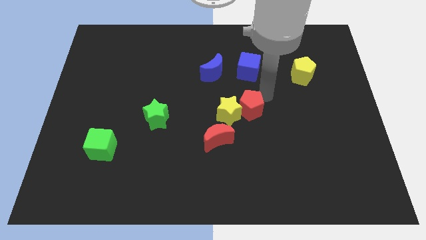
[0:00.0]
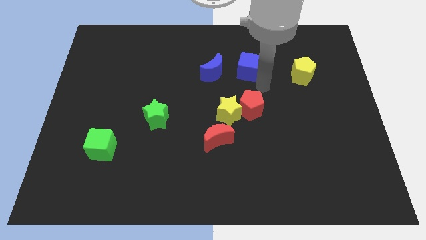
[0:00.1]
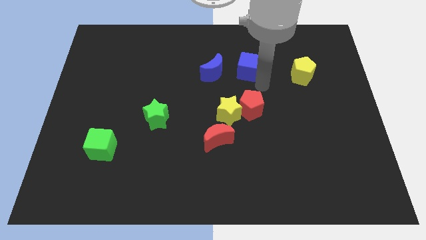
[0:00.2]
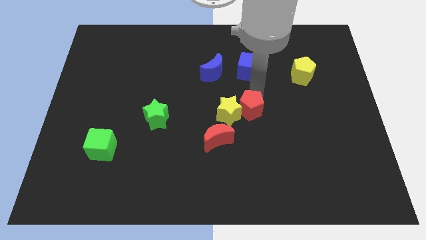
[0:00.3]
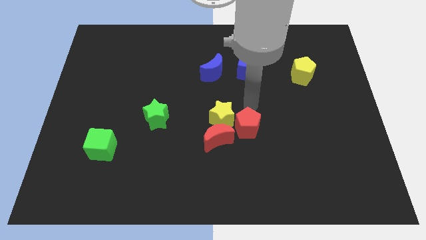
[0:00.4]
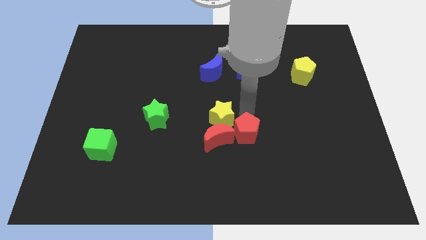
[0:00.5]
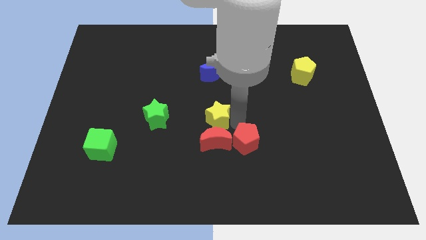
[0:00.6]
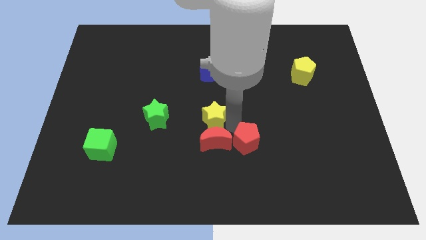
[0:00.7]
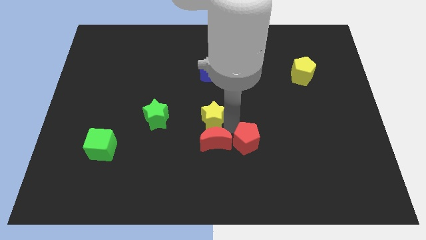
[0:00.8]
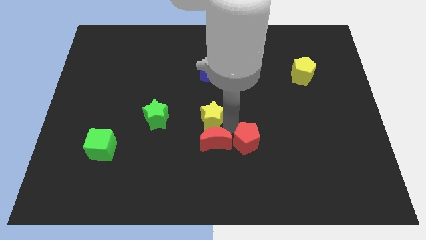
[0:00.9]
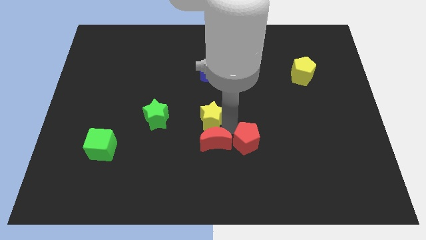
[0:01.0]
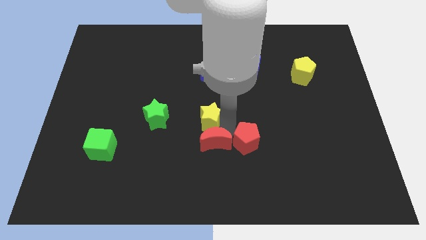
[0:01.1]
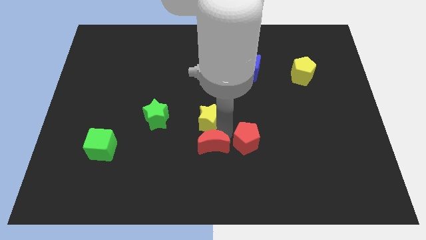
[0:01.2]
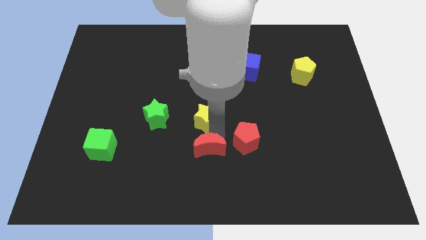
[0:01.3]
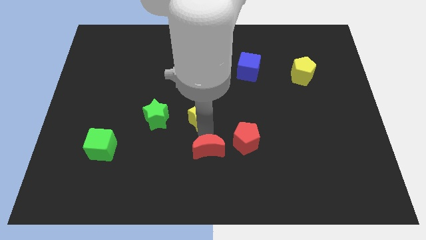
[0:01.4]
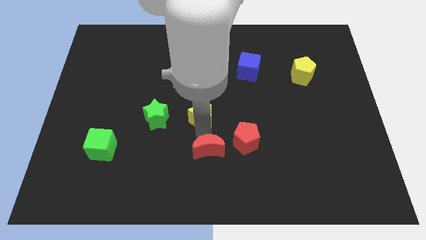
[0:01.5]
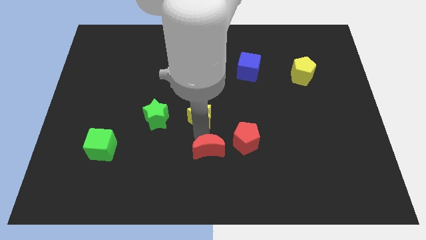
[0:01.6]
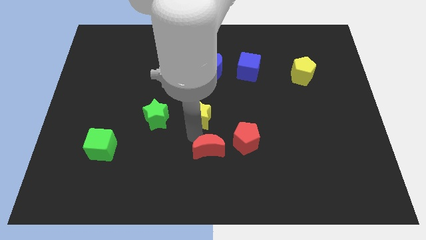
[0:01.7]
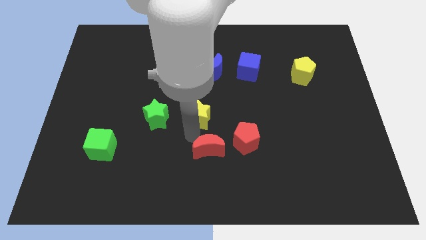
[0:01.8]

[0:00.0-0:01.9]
make a triangle out of red blocks and the yellow star

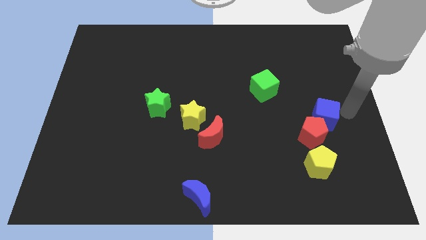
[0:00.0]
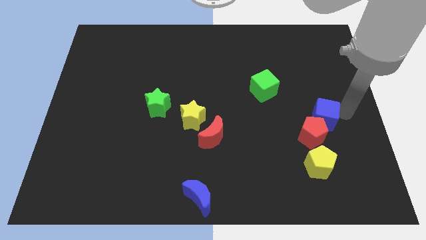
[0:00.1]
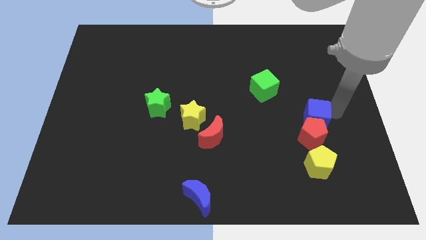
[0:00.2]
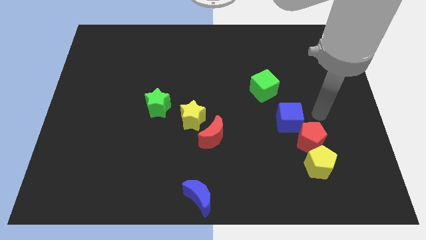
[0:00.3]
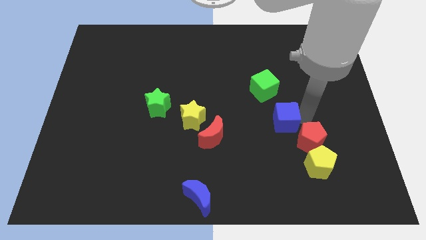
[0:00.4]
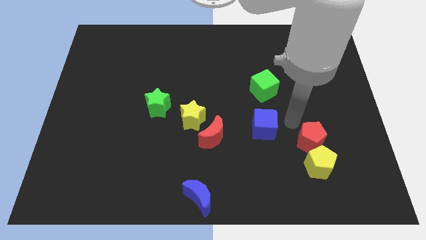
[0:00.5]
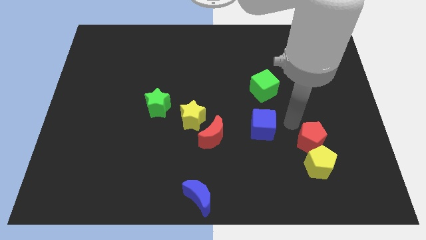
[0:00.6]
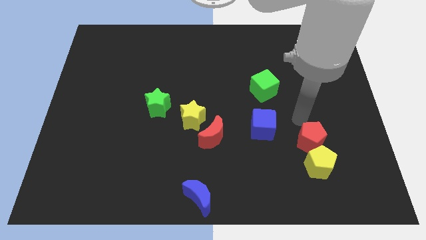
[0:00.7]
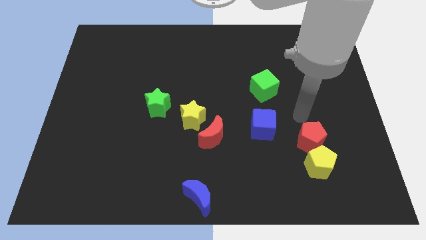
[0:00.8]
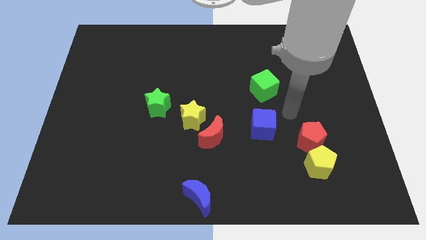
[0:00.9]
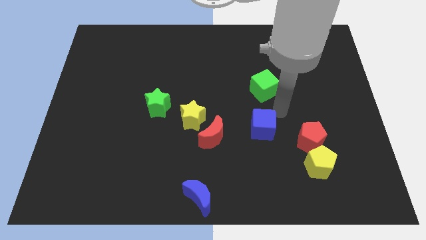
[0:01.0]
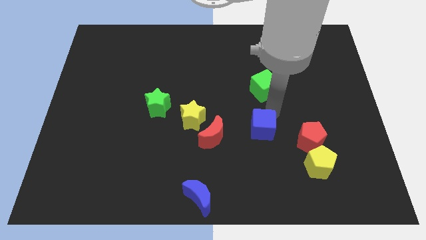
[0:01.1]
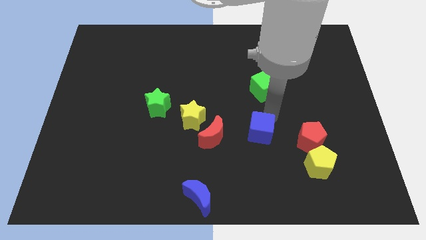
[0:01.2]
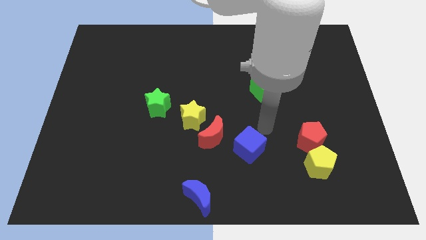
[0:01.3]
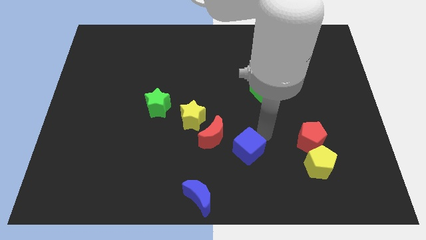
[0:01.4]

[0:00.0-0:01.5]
separate the blue cube from the red pentagon

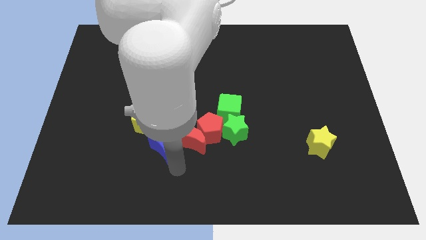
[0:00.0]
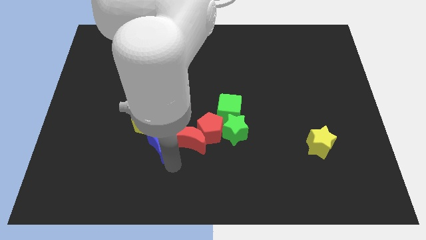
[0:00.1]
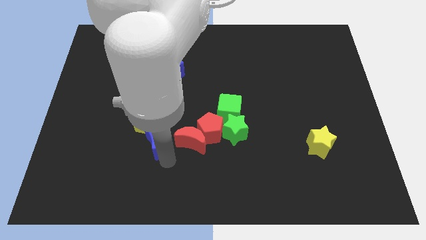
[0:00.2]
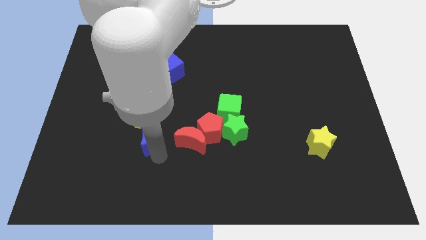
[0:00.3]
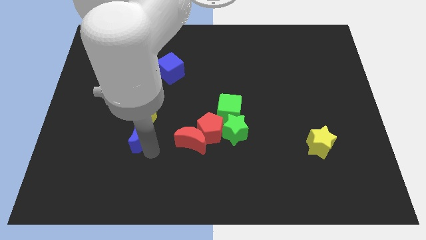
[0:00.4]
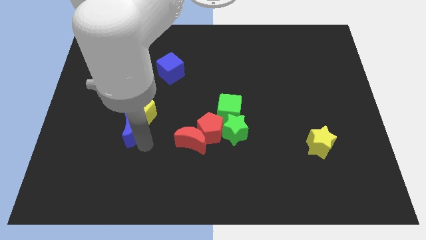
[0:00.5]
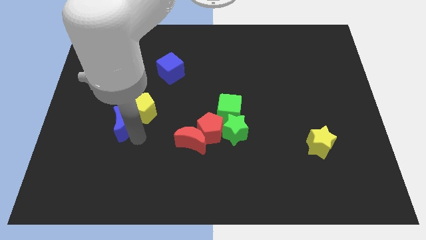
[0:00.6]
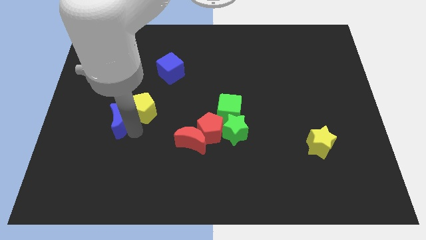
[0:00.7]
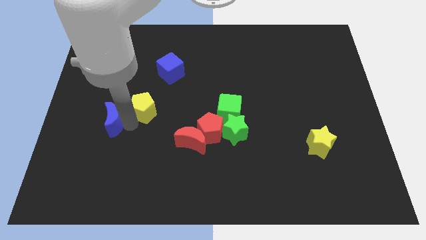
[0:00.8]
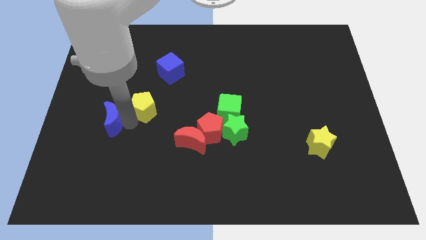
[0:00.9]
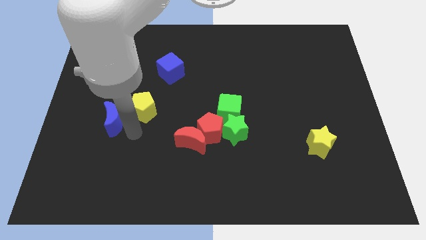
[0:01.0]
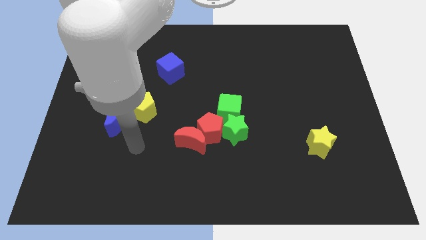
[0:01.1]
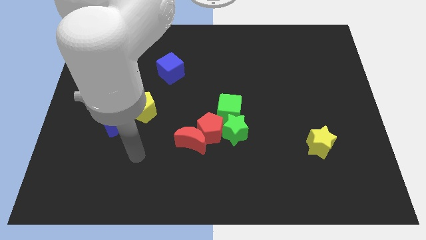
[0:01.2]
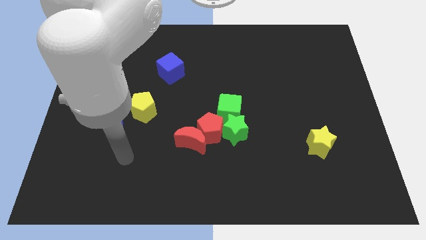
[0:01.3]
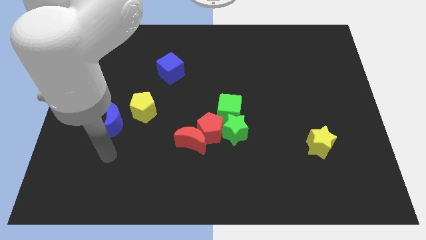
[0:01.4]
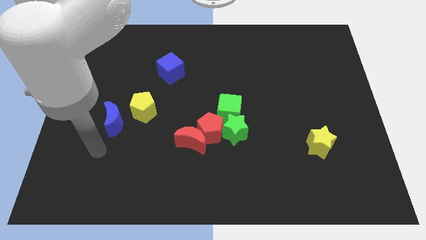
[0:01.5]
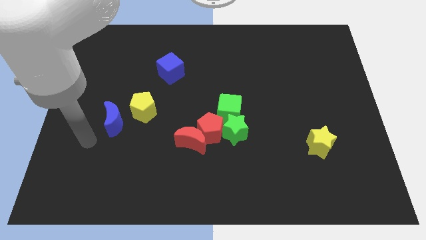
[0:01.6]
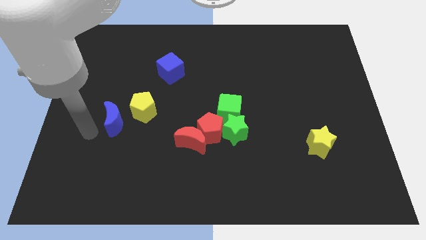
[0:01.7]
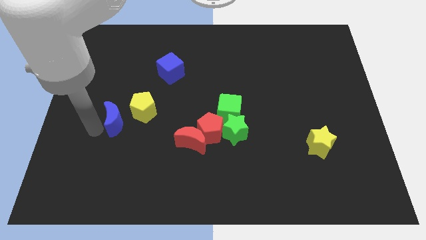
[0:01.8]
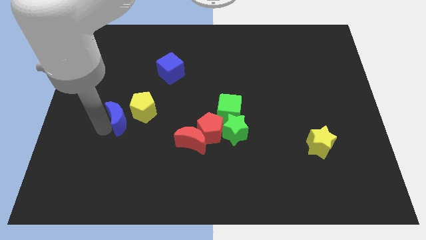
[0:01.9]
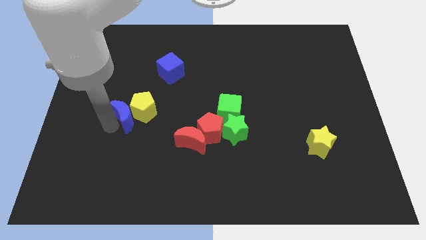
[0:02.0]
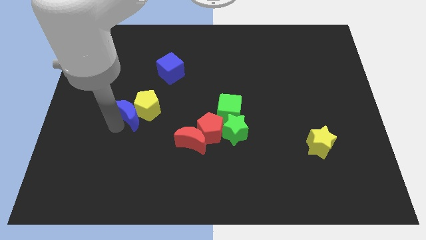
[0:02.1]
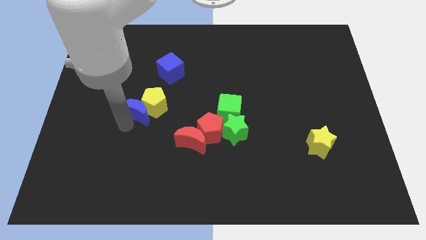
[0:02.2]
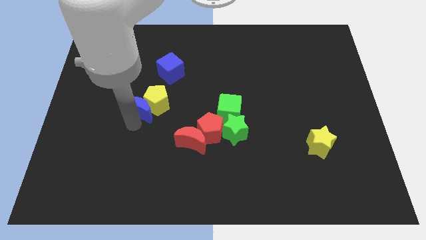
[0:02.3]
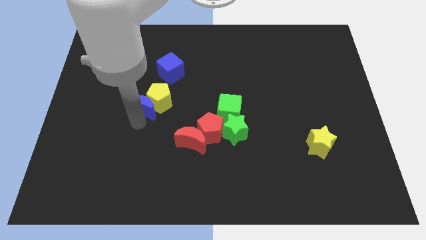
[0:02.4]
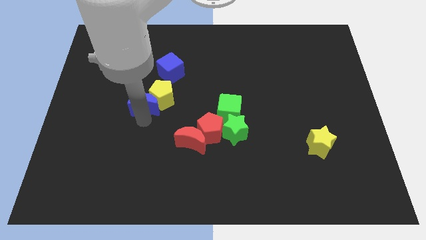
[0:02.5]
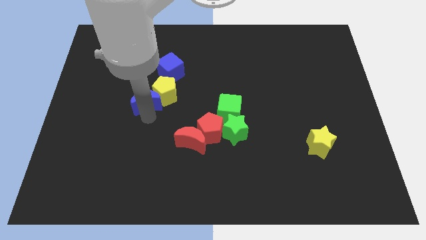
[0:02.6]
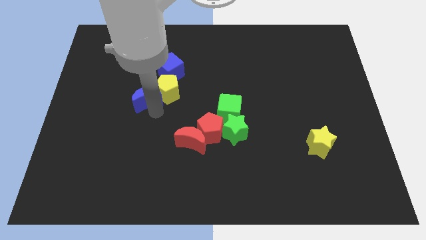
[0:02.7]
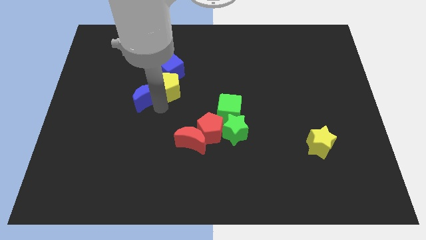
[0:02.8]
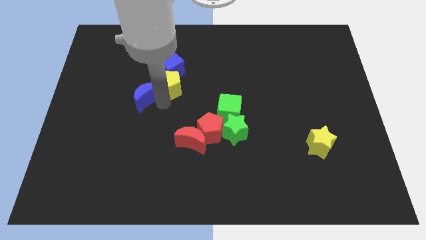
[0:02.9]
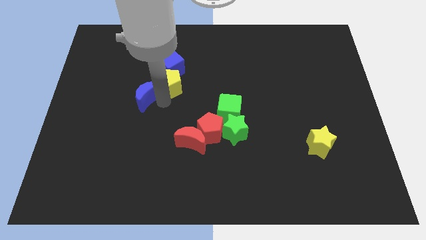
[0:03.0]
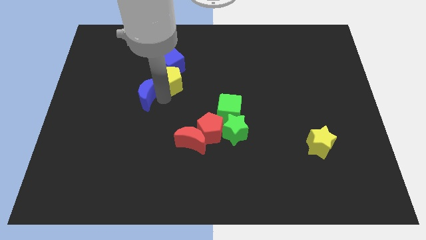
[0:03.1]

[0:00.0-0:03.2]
push the blue moon along with the yellow pentagon into the blue cube

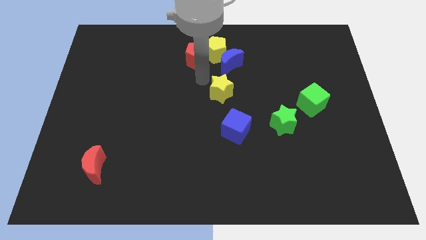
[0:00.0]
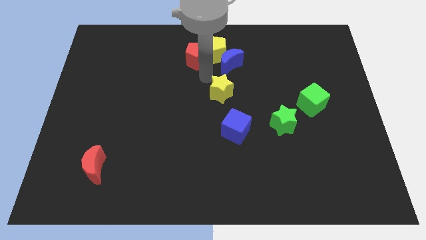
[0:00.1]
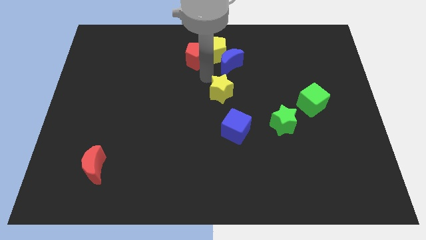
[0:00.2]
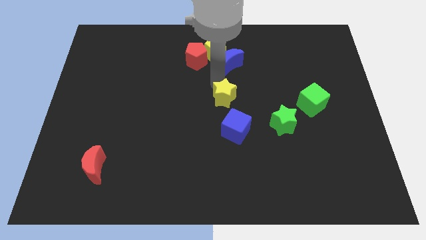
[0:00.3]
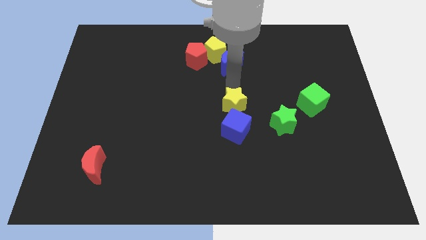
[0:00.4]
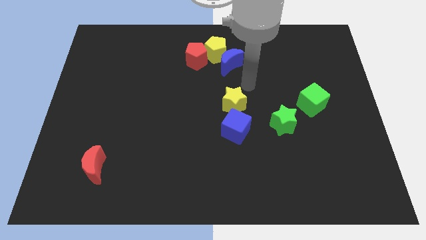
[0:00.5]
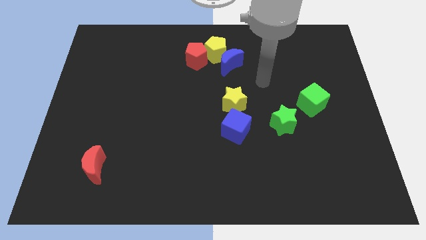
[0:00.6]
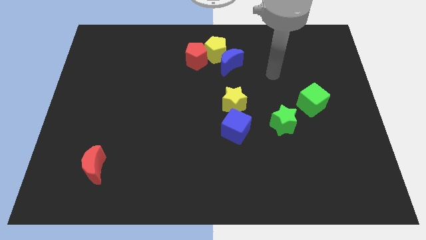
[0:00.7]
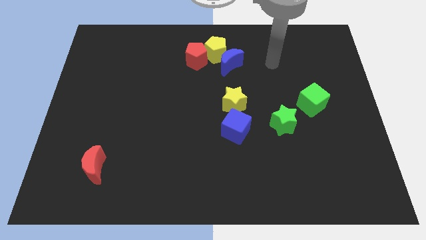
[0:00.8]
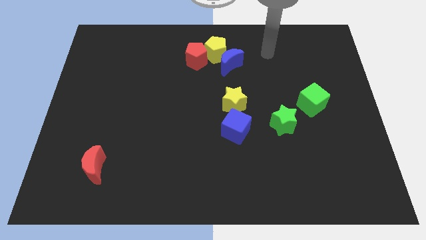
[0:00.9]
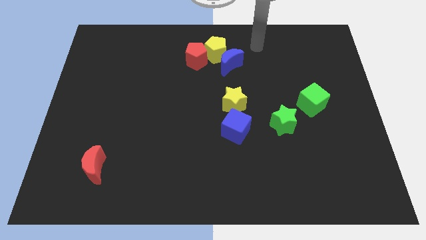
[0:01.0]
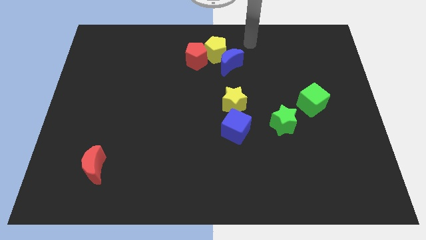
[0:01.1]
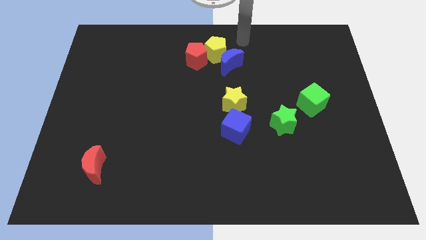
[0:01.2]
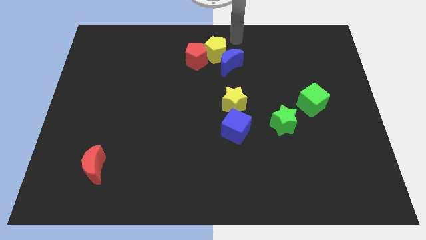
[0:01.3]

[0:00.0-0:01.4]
move yellow star to top of blue cube

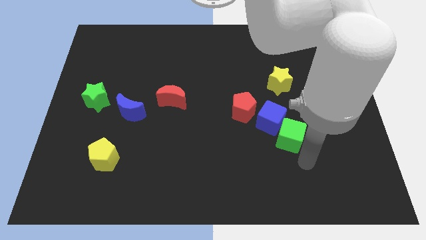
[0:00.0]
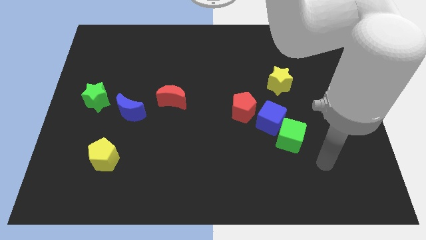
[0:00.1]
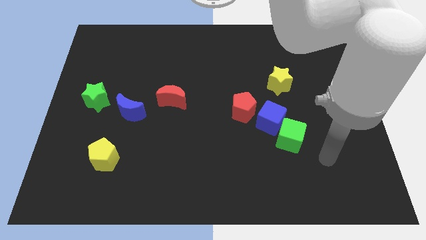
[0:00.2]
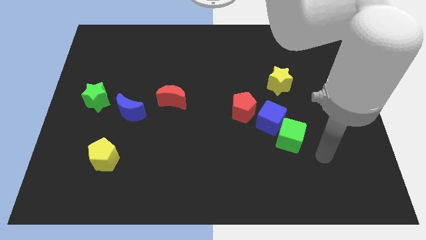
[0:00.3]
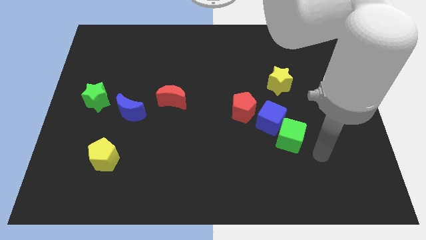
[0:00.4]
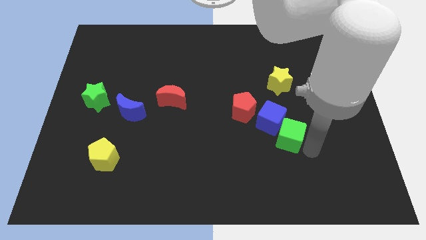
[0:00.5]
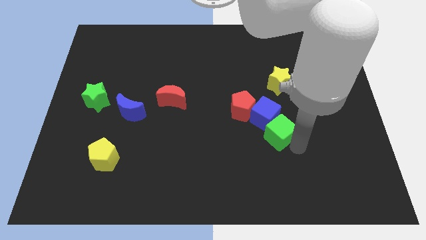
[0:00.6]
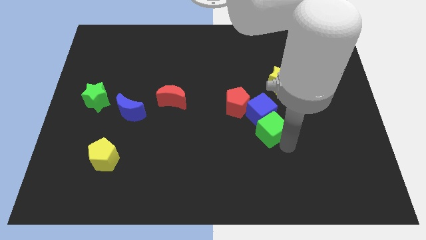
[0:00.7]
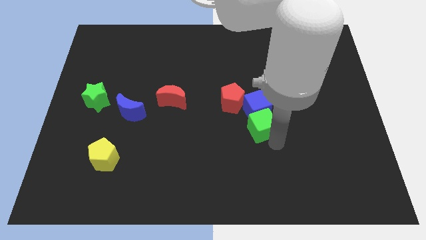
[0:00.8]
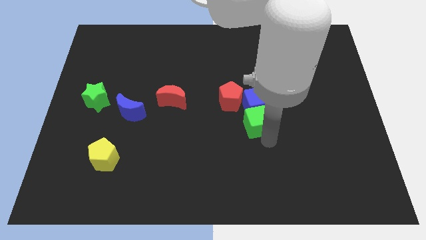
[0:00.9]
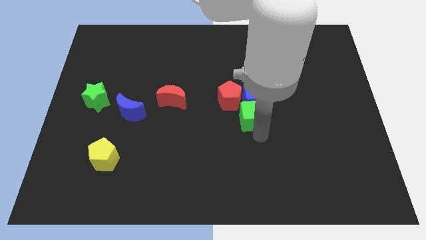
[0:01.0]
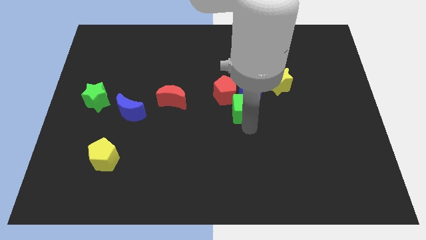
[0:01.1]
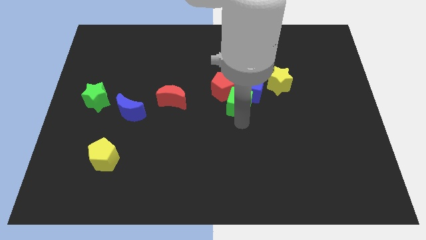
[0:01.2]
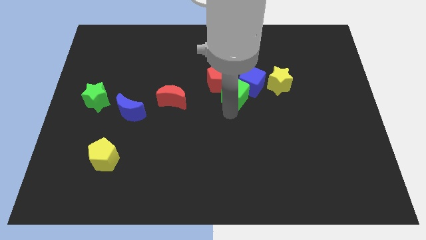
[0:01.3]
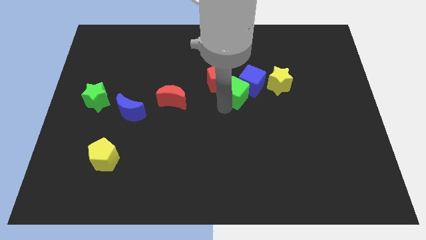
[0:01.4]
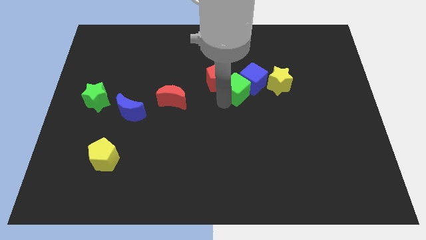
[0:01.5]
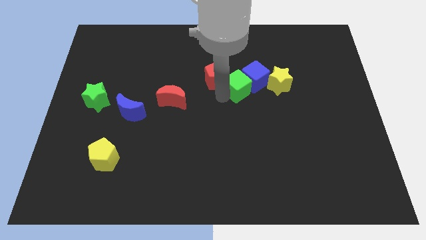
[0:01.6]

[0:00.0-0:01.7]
push the group of blocks towards the top center
